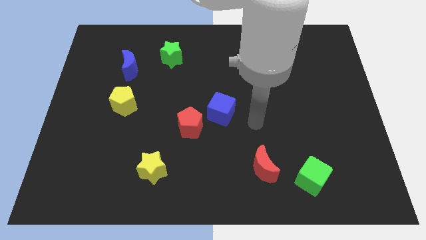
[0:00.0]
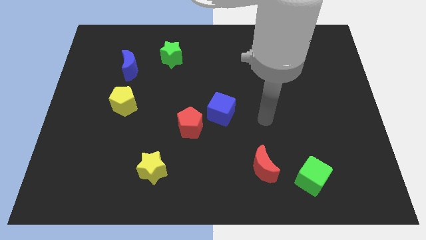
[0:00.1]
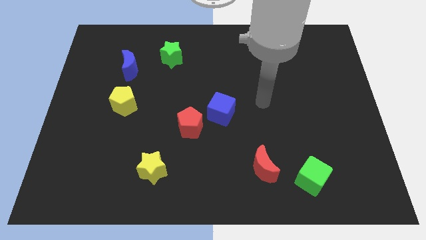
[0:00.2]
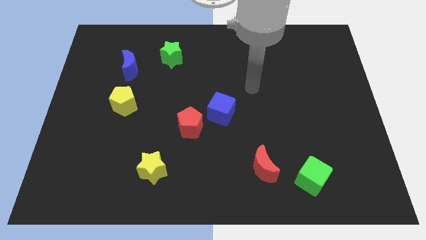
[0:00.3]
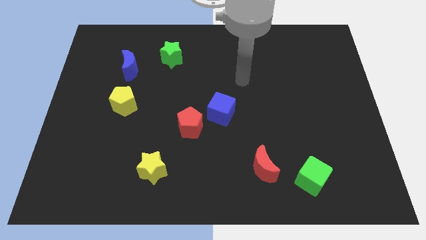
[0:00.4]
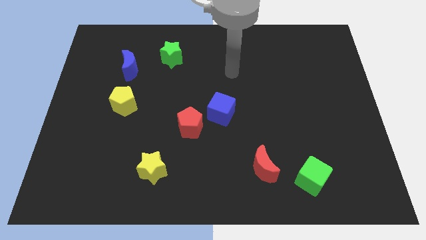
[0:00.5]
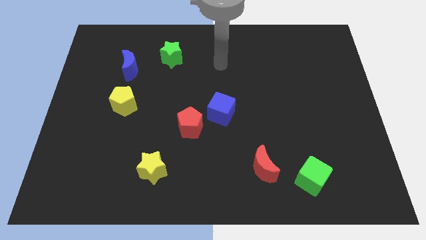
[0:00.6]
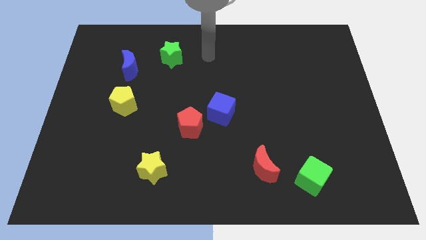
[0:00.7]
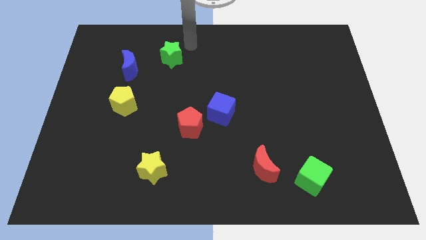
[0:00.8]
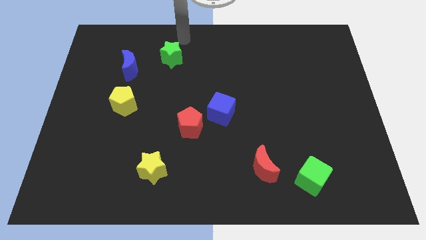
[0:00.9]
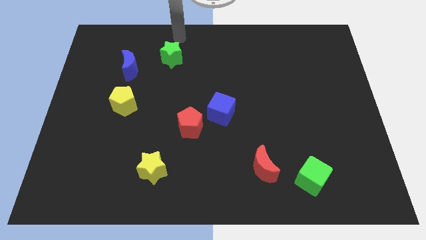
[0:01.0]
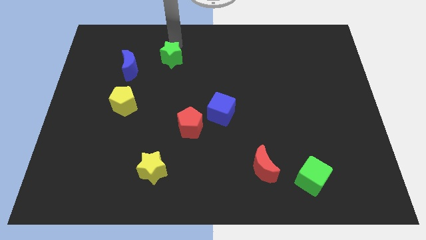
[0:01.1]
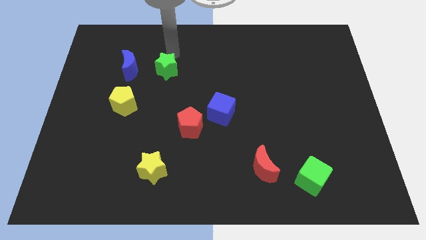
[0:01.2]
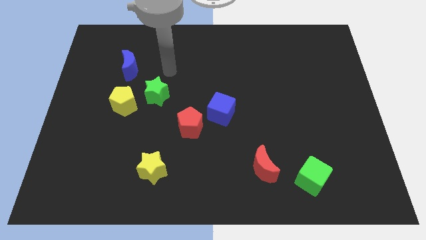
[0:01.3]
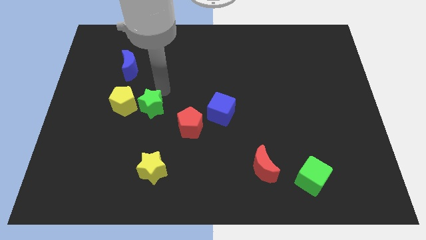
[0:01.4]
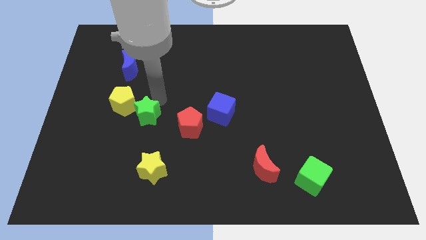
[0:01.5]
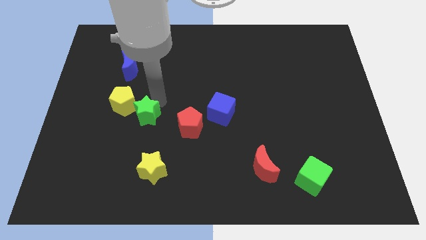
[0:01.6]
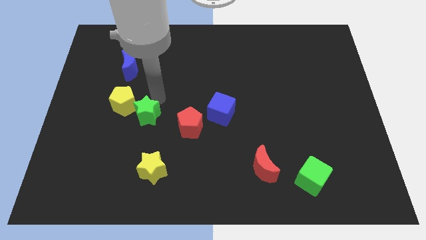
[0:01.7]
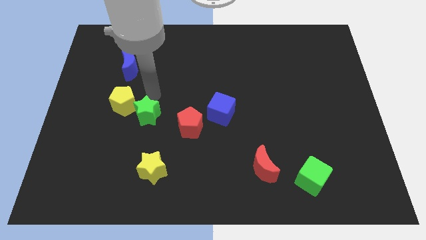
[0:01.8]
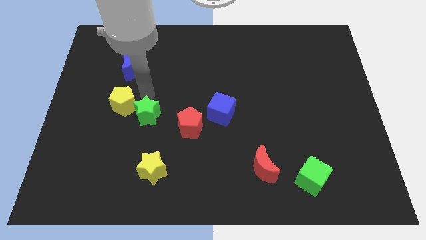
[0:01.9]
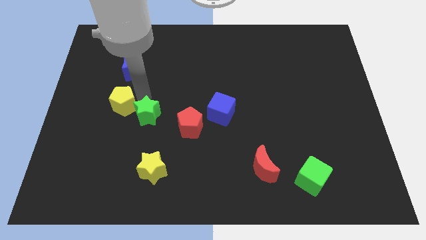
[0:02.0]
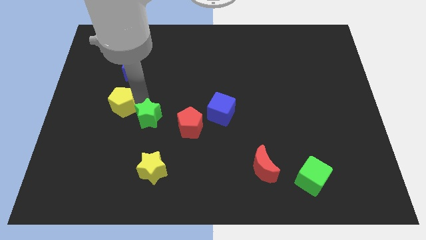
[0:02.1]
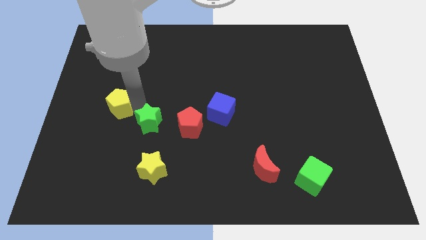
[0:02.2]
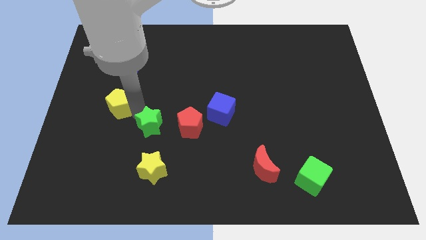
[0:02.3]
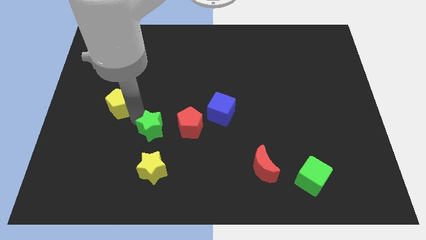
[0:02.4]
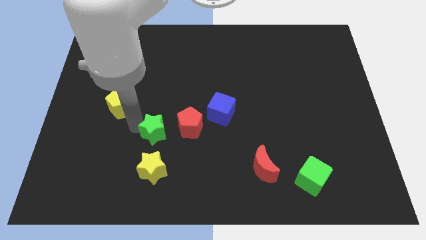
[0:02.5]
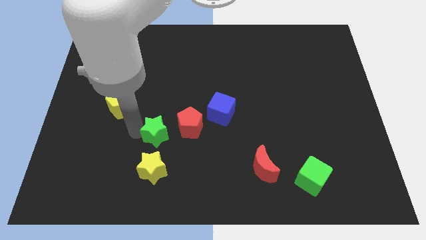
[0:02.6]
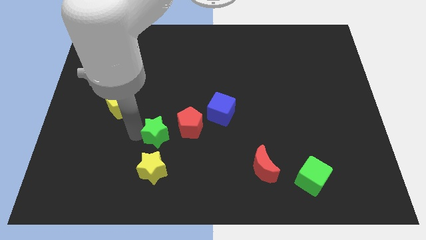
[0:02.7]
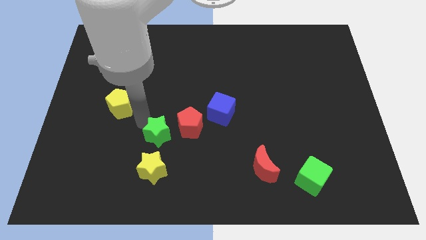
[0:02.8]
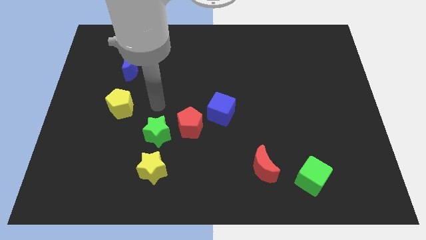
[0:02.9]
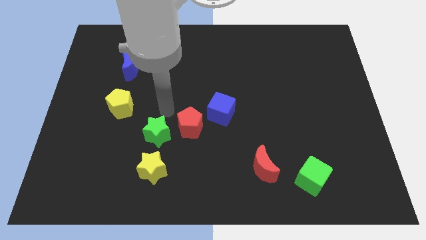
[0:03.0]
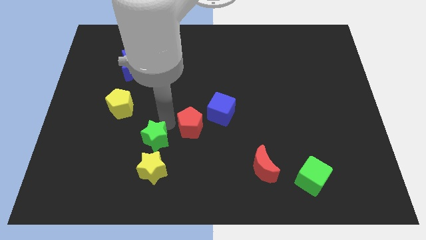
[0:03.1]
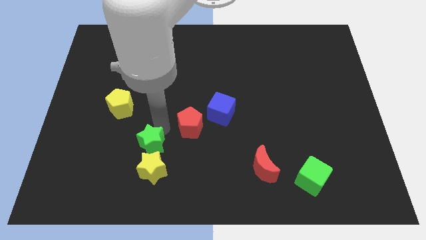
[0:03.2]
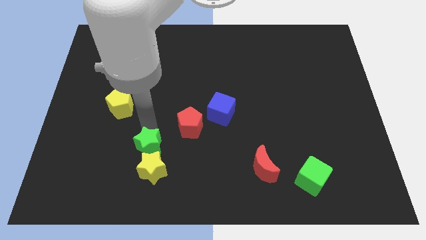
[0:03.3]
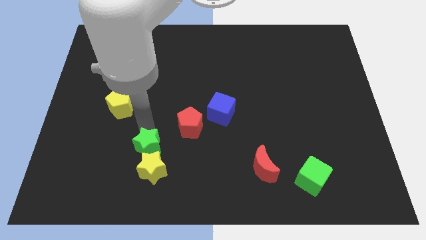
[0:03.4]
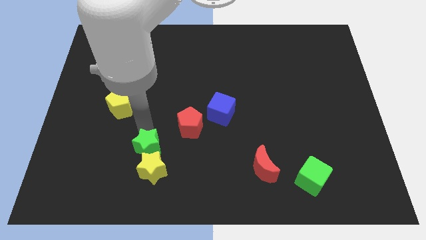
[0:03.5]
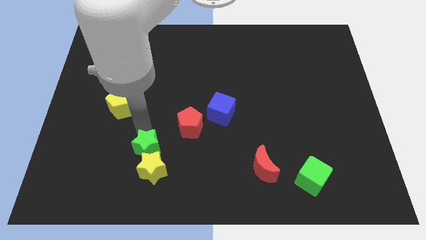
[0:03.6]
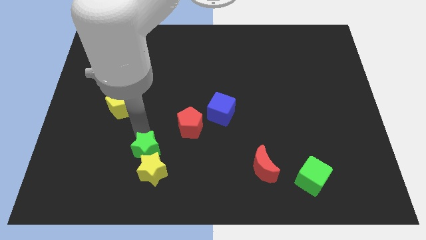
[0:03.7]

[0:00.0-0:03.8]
put the green star close to the yellow star

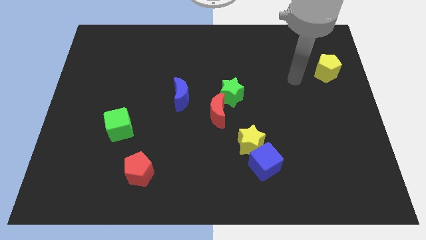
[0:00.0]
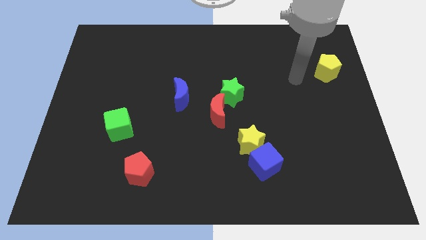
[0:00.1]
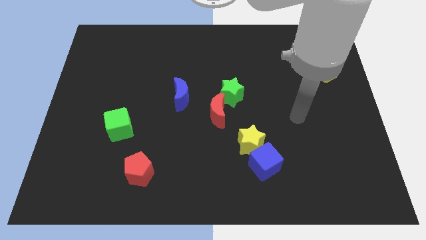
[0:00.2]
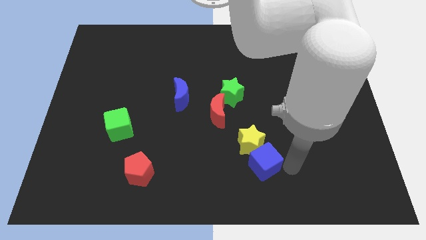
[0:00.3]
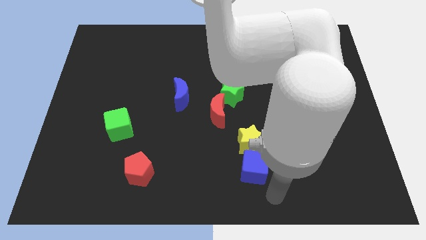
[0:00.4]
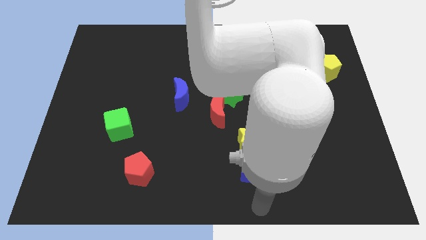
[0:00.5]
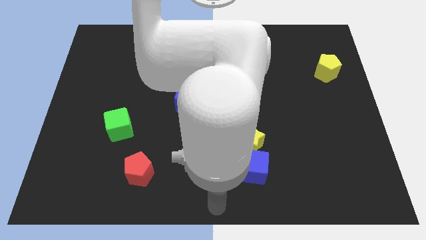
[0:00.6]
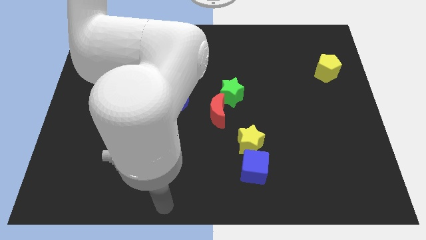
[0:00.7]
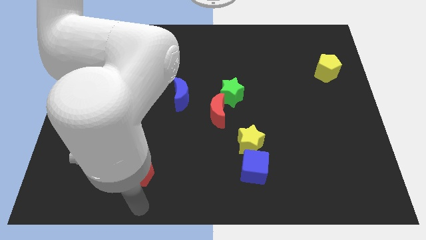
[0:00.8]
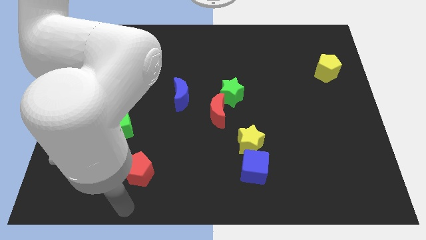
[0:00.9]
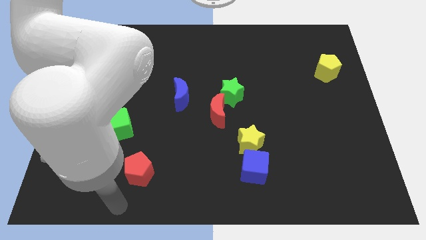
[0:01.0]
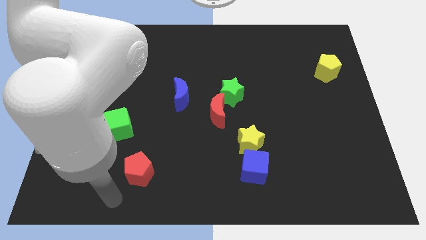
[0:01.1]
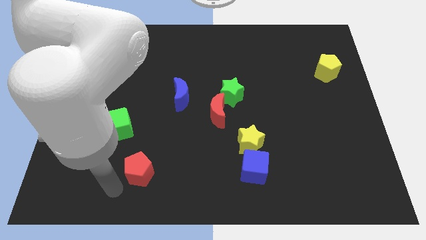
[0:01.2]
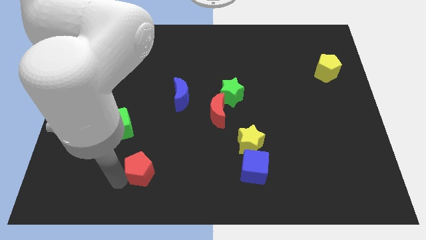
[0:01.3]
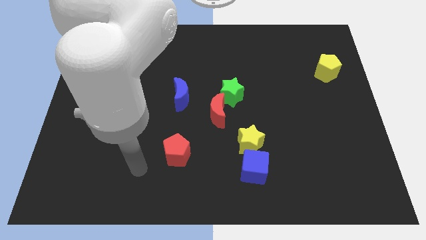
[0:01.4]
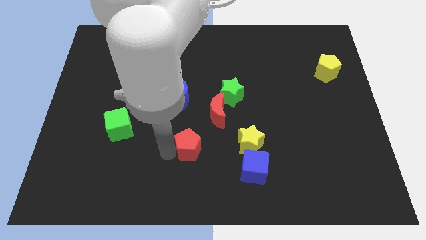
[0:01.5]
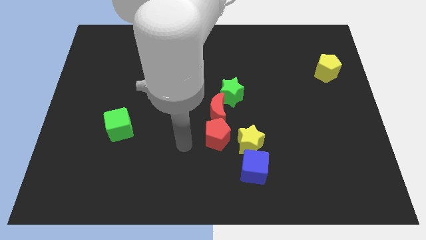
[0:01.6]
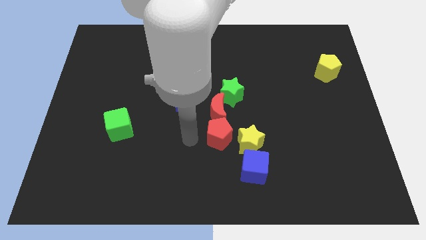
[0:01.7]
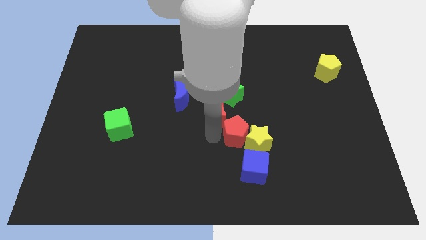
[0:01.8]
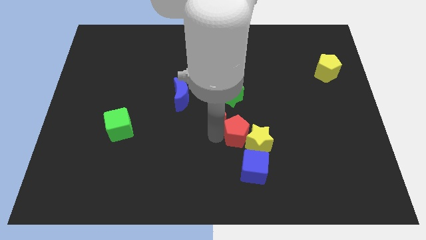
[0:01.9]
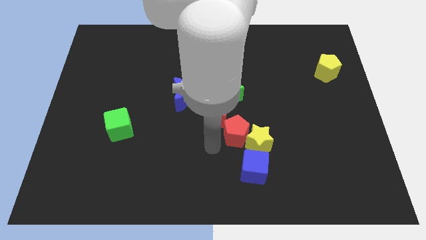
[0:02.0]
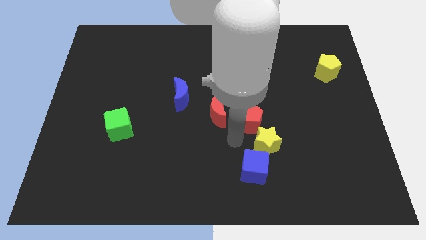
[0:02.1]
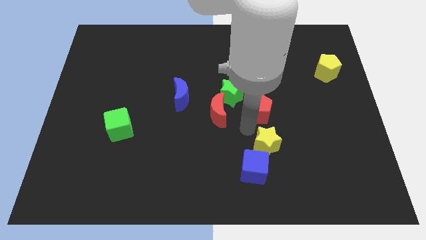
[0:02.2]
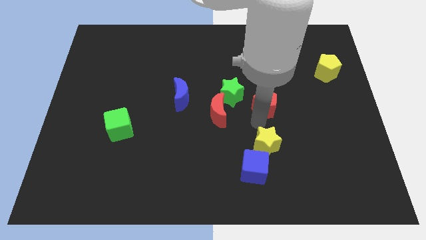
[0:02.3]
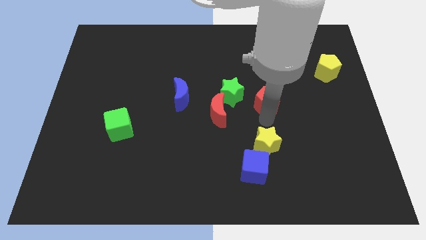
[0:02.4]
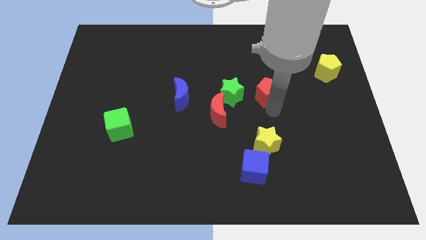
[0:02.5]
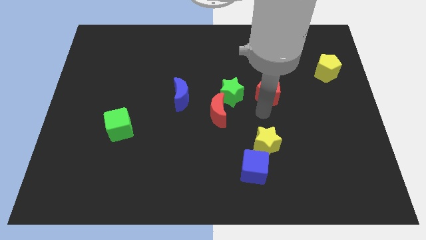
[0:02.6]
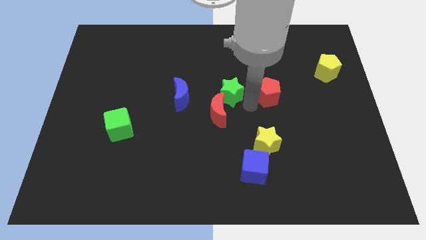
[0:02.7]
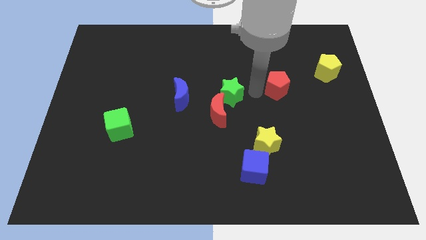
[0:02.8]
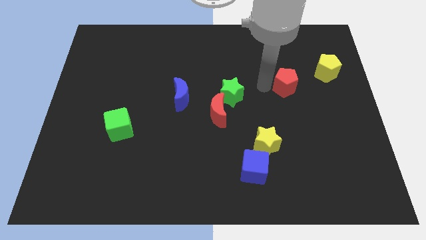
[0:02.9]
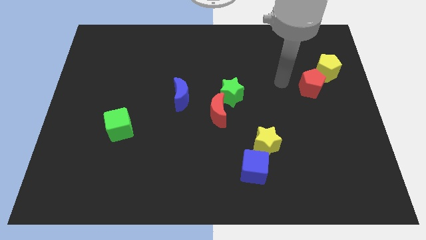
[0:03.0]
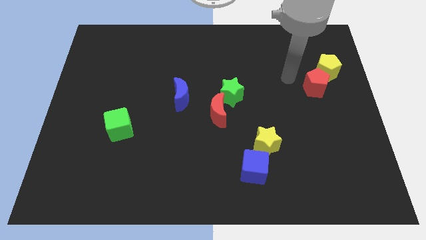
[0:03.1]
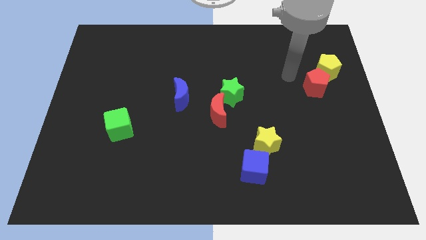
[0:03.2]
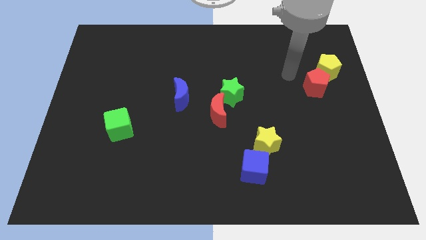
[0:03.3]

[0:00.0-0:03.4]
slide the red pentagon next to the yellow pentagon

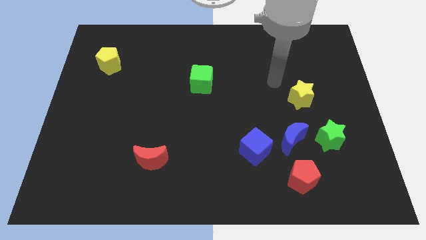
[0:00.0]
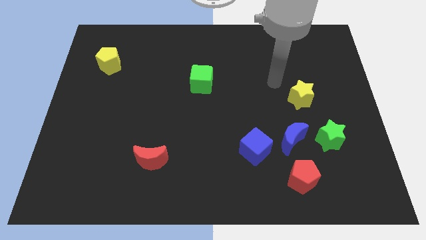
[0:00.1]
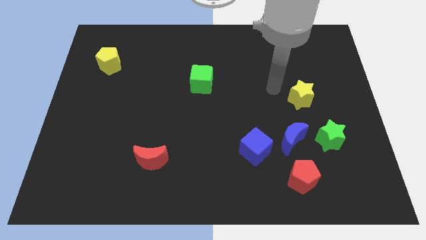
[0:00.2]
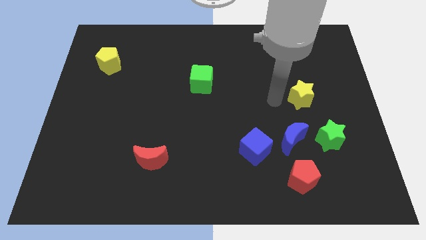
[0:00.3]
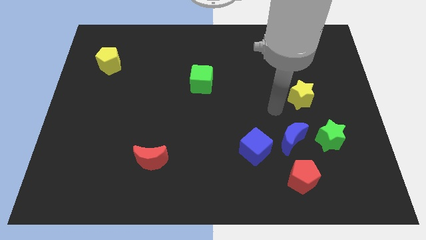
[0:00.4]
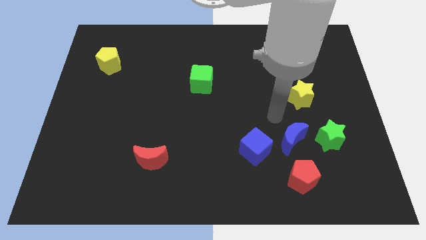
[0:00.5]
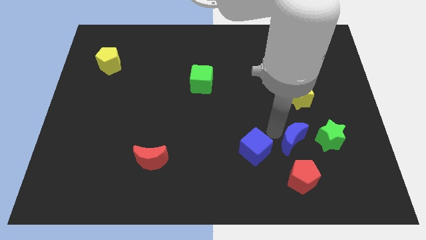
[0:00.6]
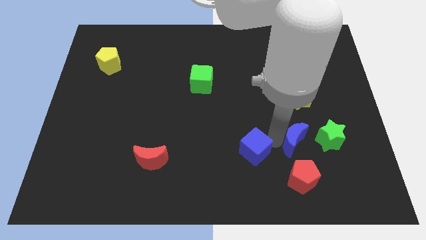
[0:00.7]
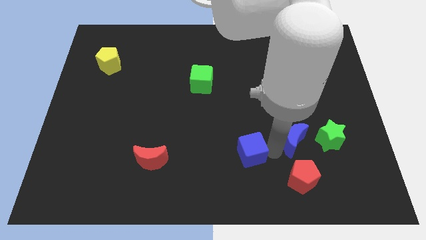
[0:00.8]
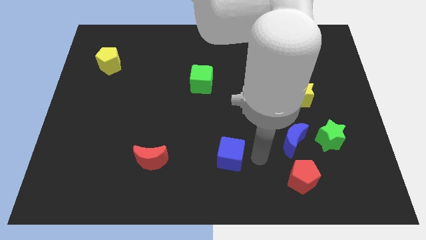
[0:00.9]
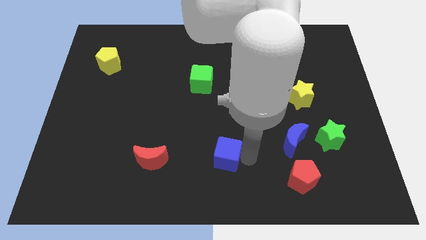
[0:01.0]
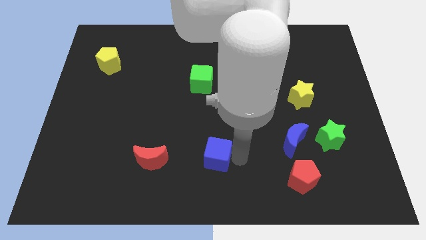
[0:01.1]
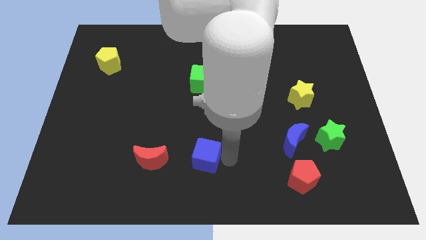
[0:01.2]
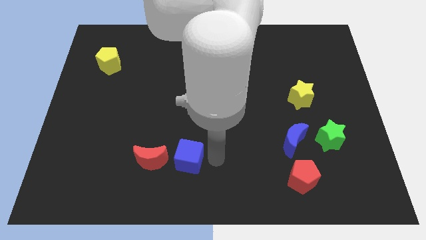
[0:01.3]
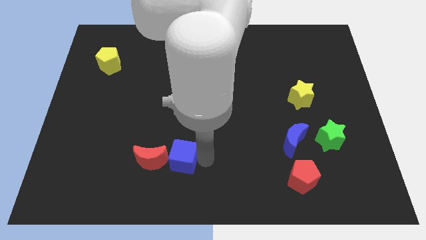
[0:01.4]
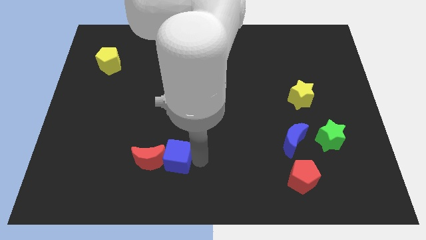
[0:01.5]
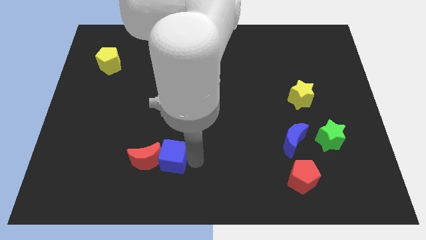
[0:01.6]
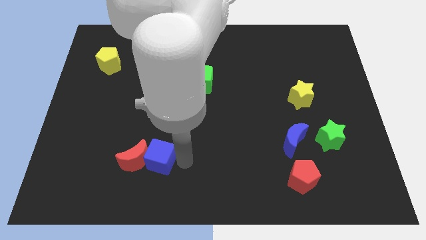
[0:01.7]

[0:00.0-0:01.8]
slide the blue cube next to the red moon
